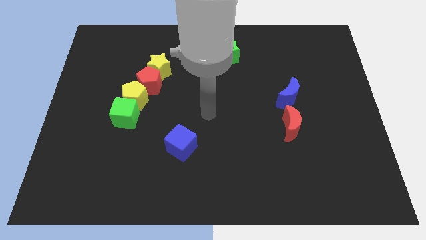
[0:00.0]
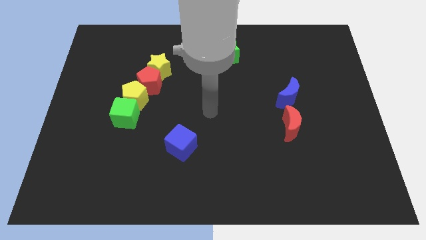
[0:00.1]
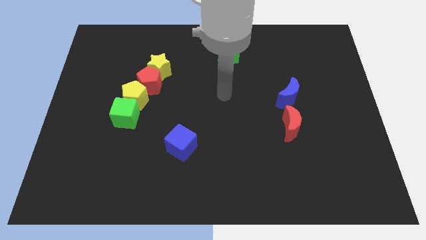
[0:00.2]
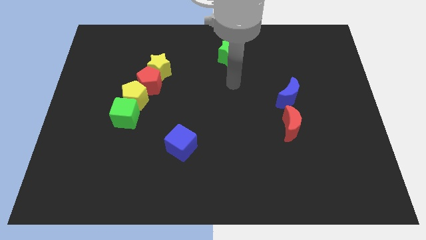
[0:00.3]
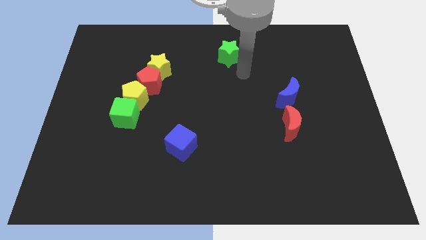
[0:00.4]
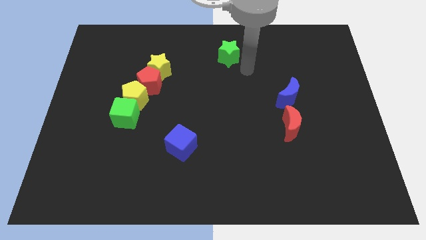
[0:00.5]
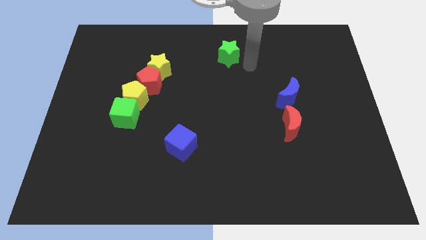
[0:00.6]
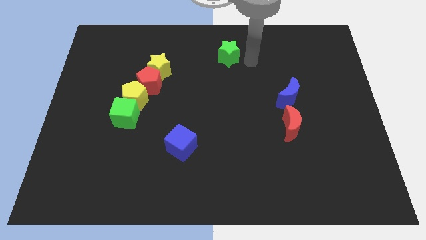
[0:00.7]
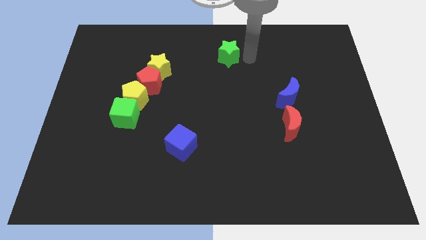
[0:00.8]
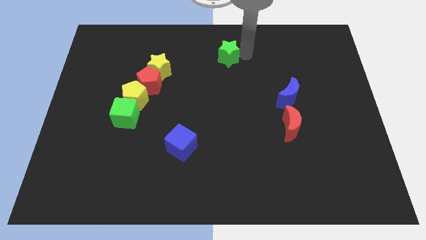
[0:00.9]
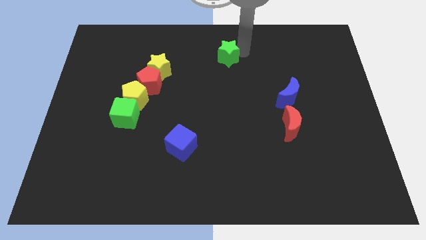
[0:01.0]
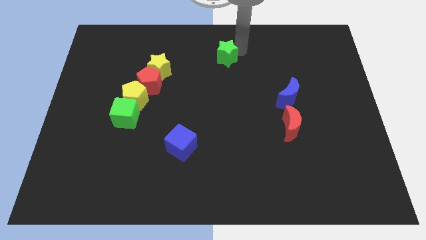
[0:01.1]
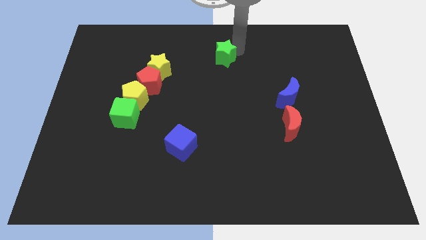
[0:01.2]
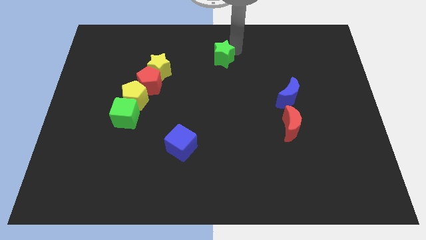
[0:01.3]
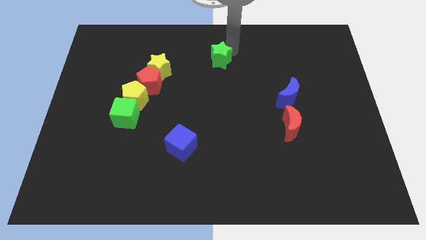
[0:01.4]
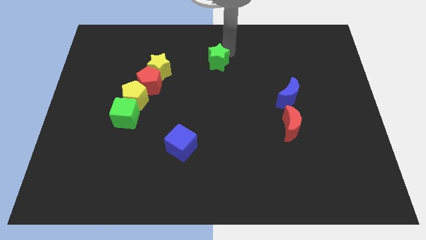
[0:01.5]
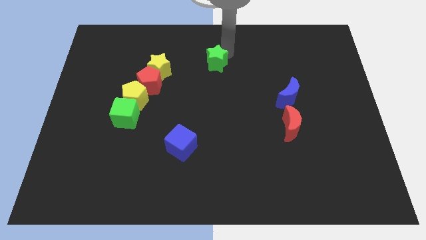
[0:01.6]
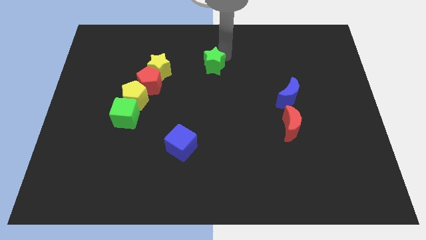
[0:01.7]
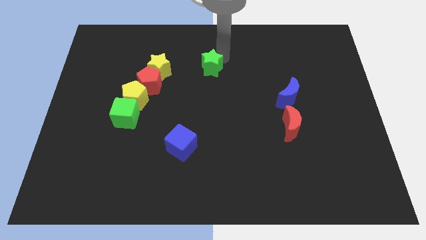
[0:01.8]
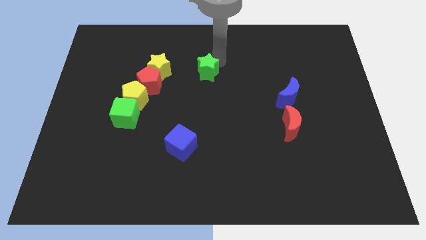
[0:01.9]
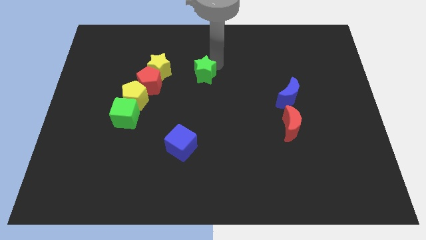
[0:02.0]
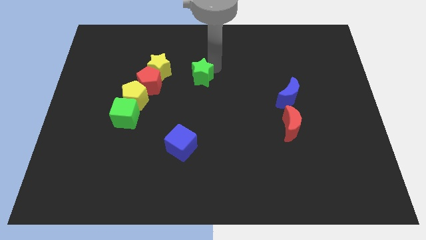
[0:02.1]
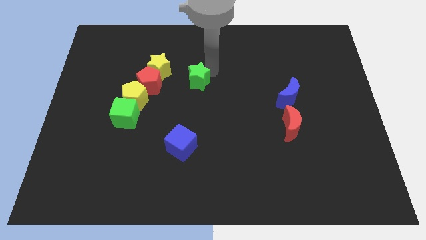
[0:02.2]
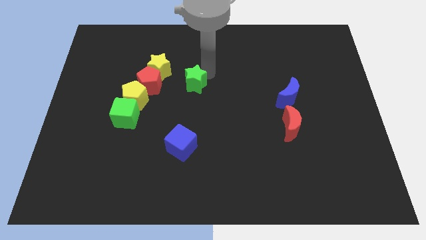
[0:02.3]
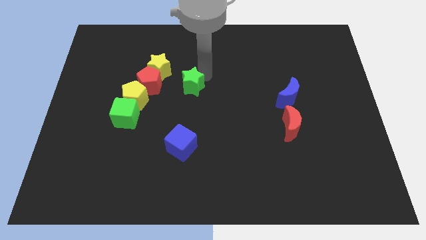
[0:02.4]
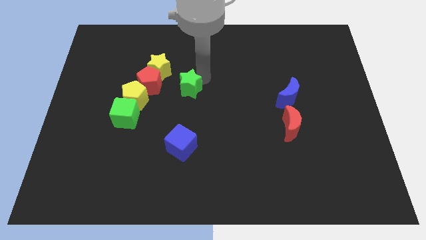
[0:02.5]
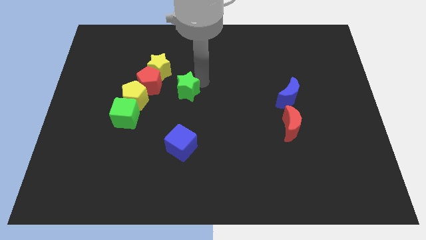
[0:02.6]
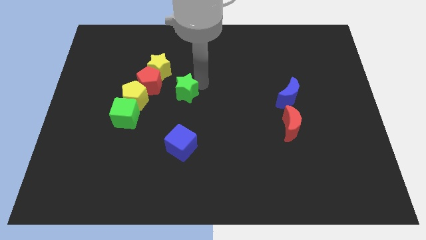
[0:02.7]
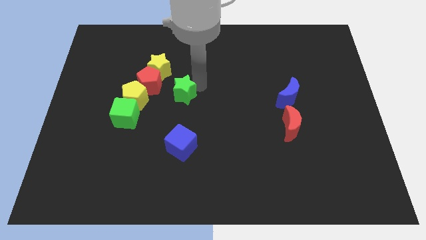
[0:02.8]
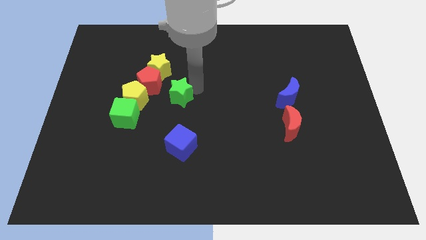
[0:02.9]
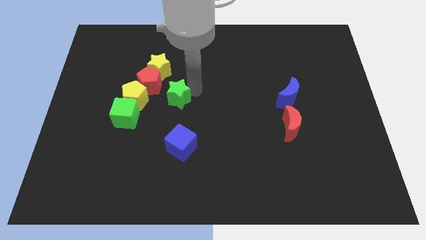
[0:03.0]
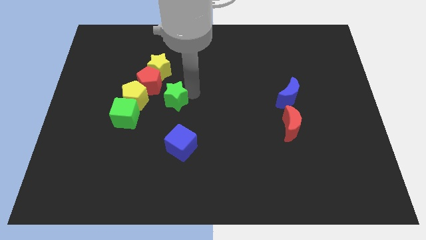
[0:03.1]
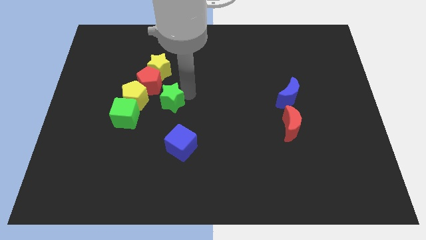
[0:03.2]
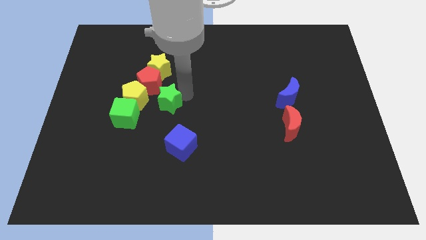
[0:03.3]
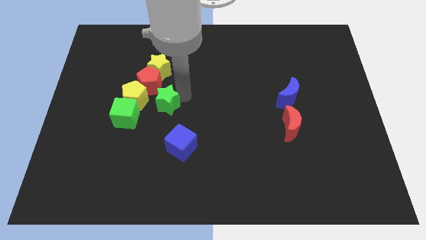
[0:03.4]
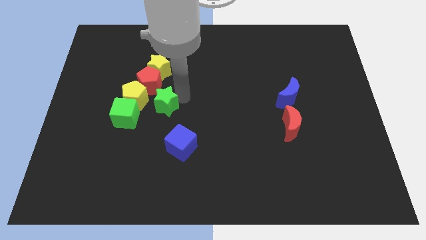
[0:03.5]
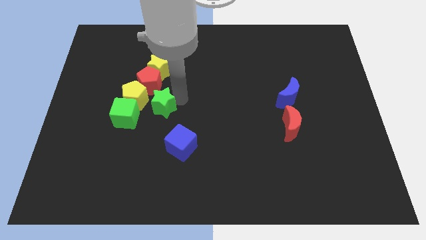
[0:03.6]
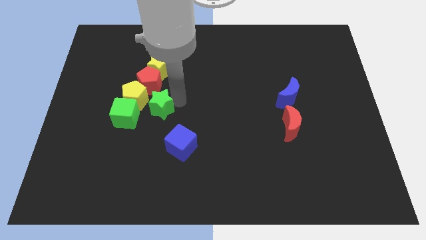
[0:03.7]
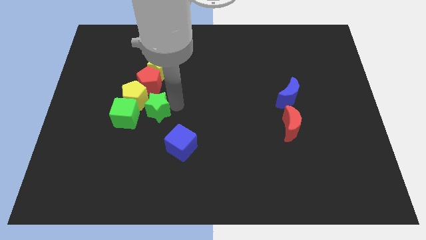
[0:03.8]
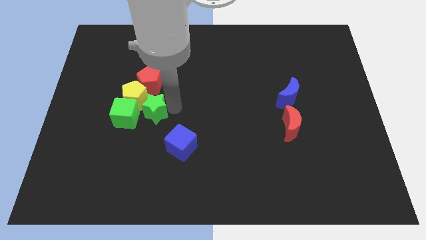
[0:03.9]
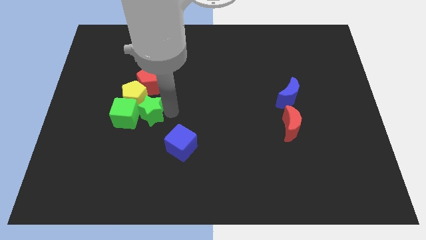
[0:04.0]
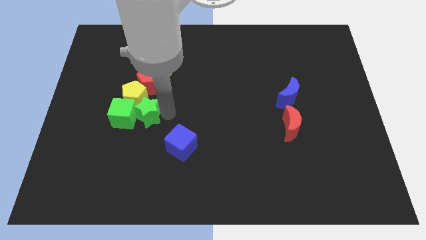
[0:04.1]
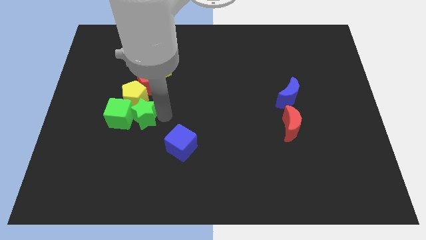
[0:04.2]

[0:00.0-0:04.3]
move the green star to the green cube

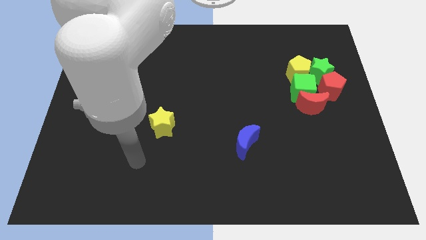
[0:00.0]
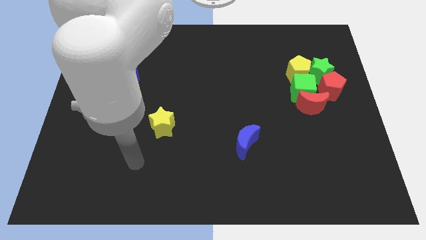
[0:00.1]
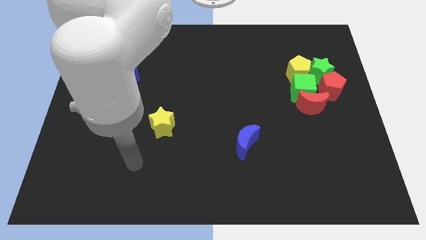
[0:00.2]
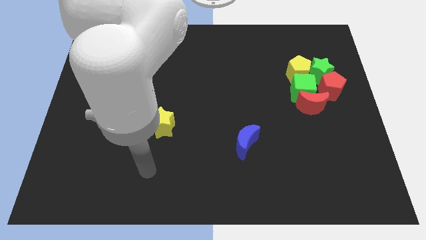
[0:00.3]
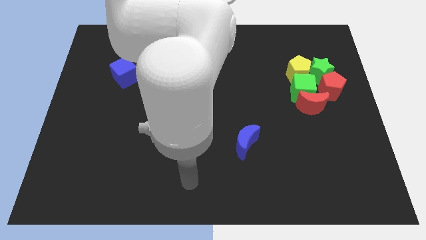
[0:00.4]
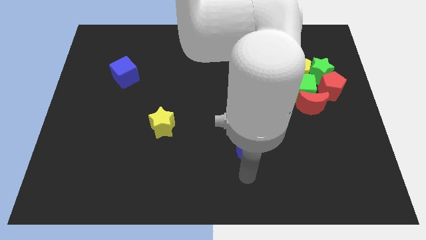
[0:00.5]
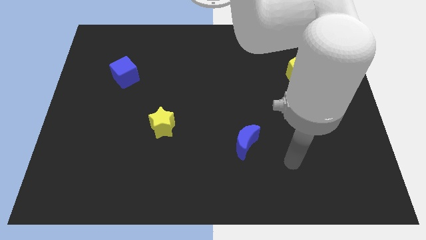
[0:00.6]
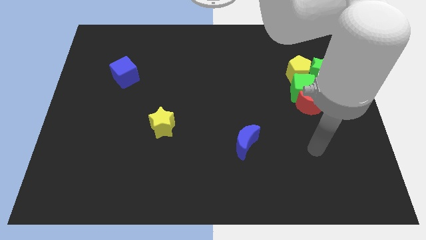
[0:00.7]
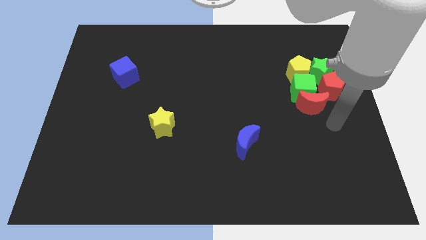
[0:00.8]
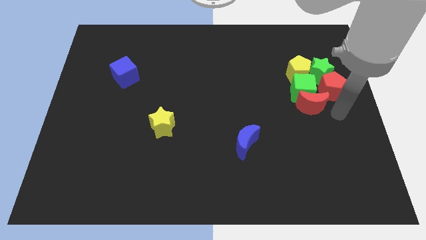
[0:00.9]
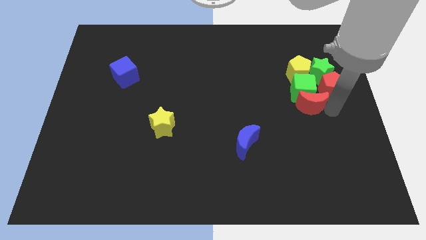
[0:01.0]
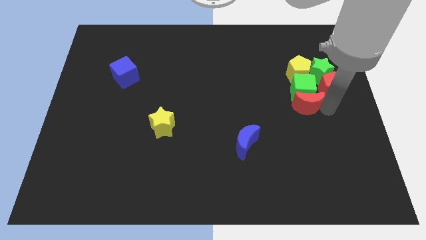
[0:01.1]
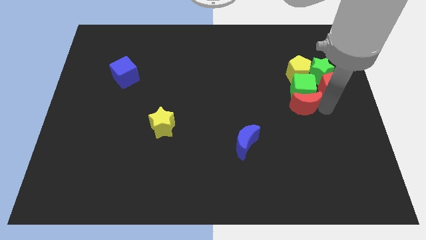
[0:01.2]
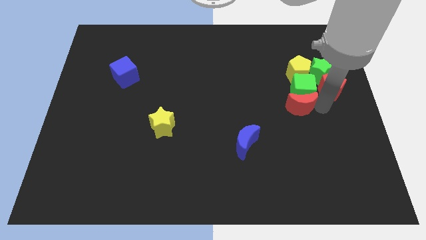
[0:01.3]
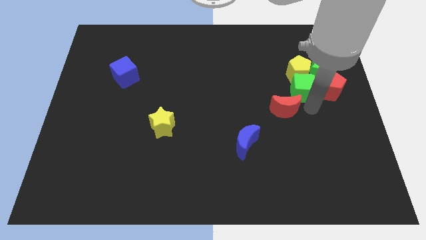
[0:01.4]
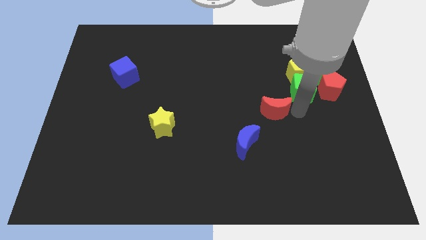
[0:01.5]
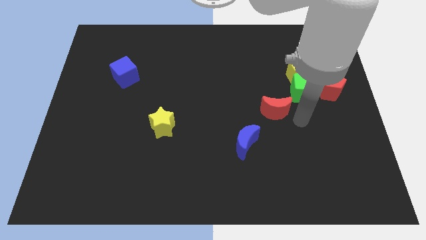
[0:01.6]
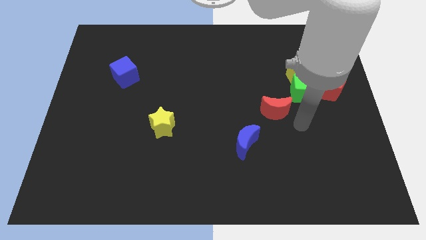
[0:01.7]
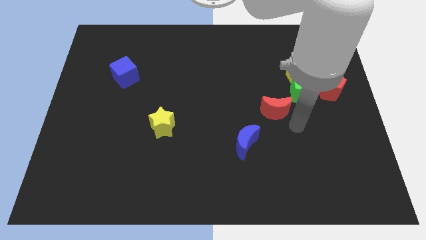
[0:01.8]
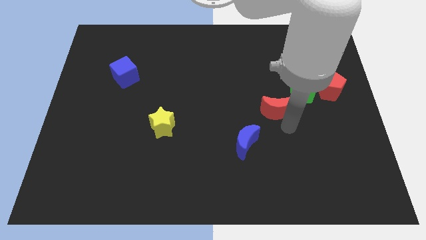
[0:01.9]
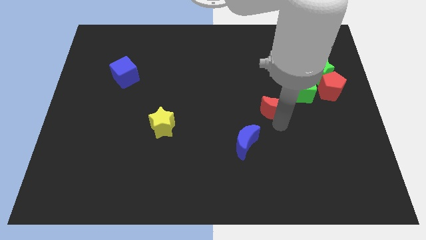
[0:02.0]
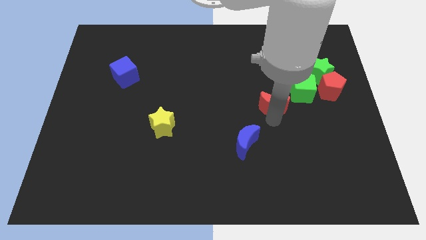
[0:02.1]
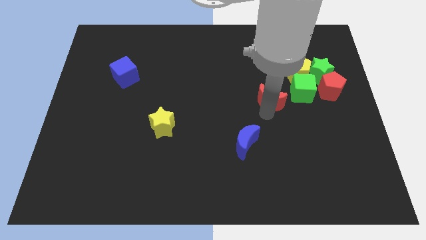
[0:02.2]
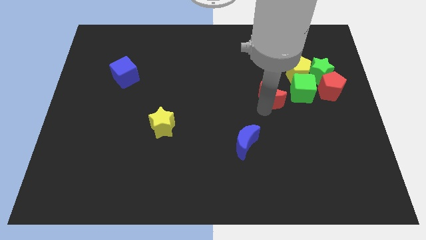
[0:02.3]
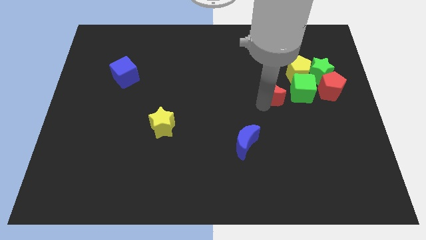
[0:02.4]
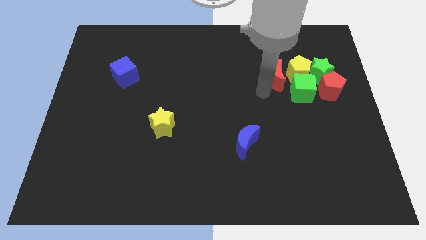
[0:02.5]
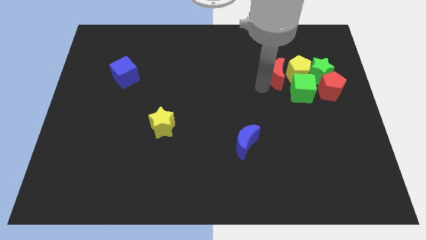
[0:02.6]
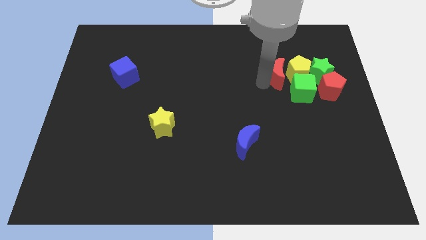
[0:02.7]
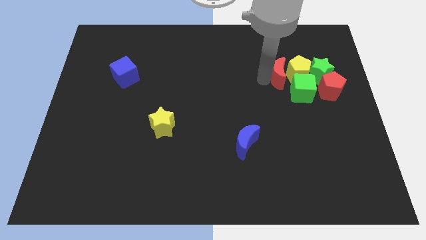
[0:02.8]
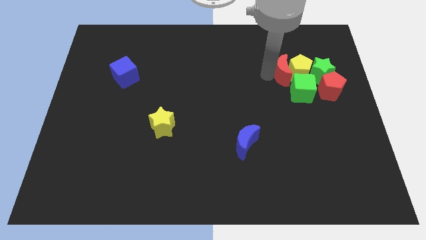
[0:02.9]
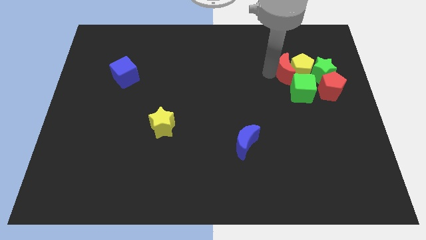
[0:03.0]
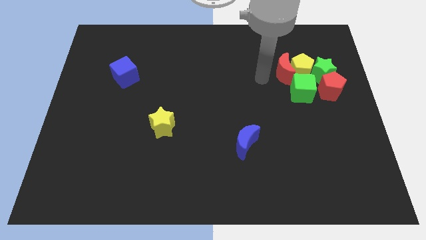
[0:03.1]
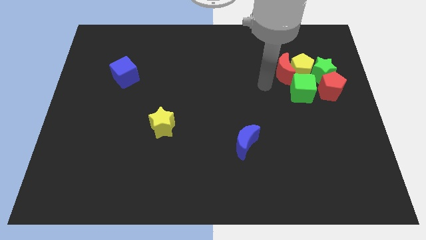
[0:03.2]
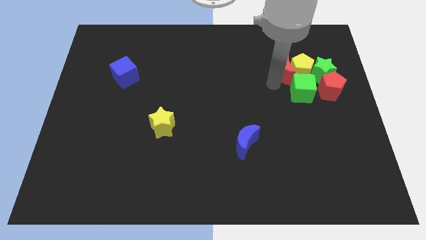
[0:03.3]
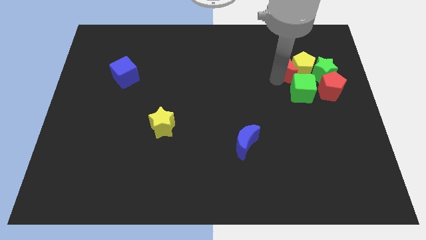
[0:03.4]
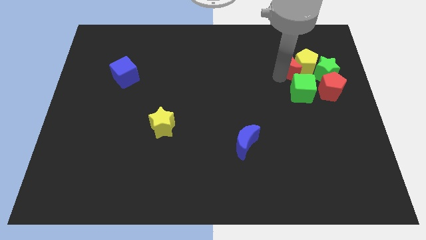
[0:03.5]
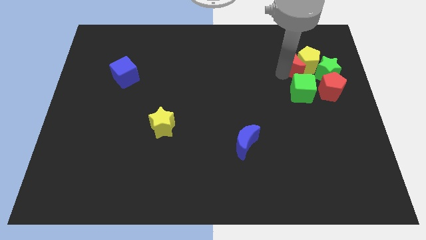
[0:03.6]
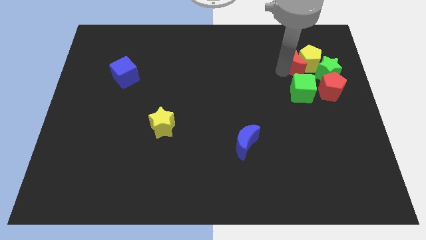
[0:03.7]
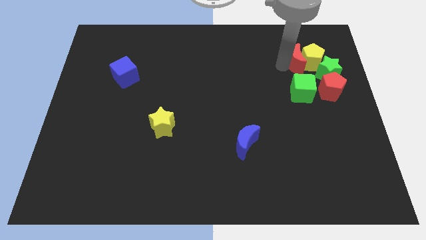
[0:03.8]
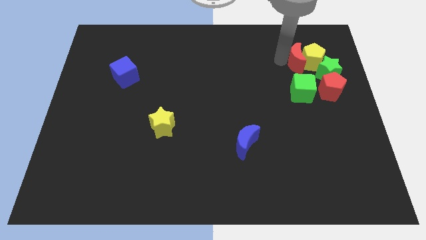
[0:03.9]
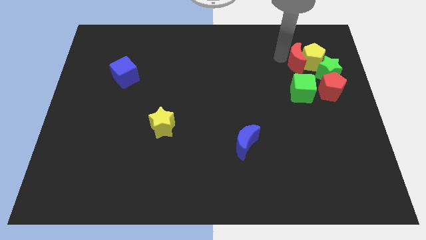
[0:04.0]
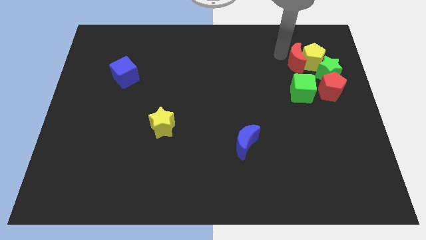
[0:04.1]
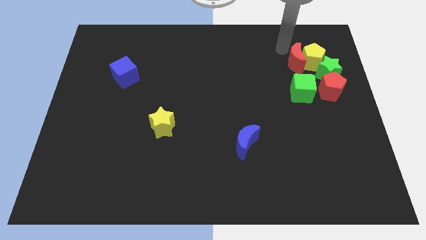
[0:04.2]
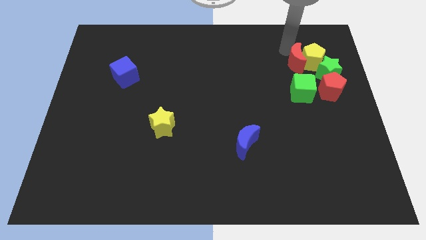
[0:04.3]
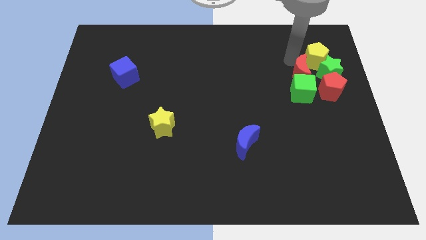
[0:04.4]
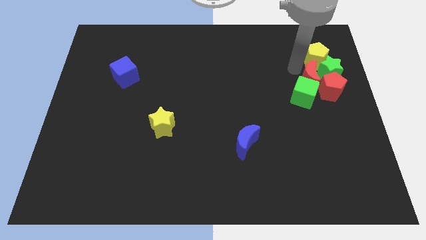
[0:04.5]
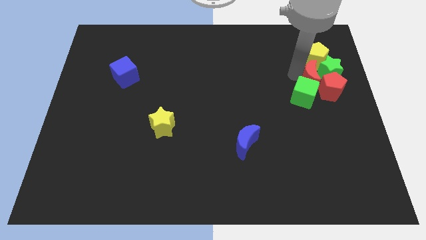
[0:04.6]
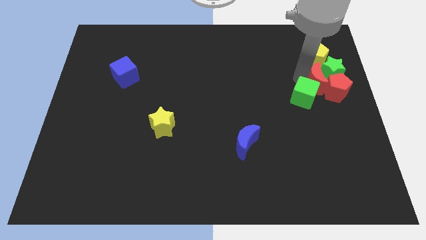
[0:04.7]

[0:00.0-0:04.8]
push the red moon close to the green star
